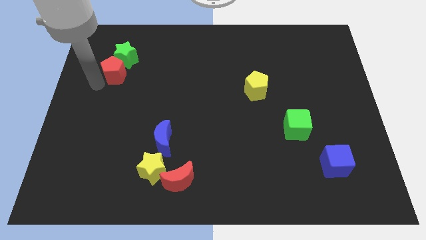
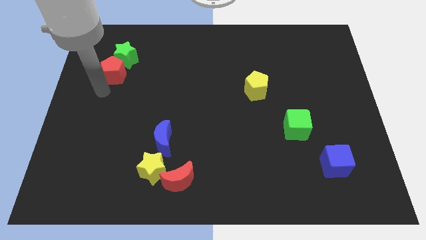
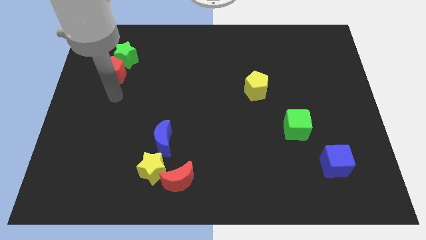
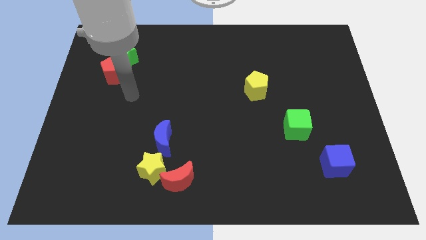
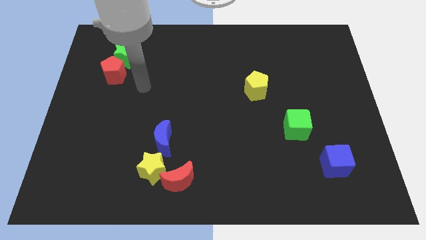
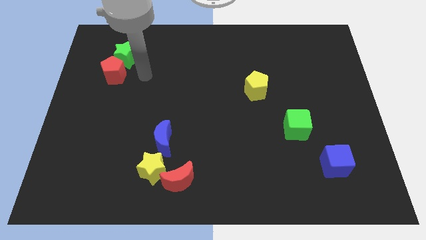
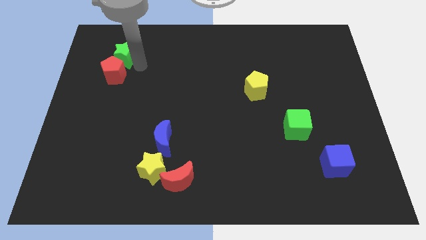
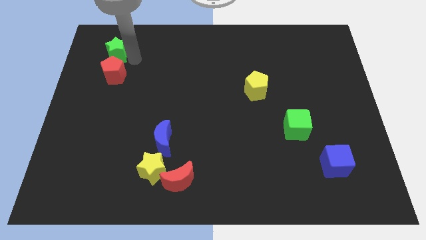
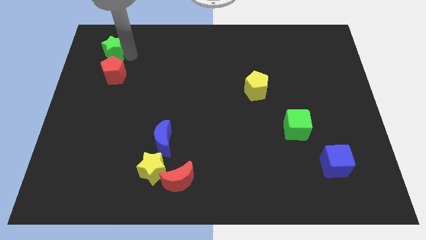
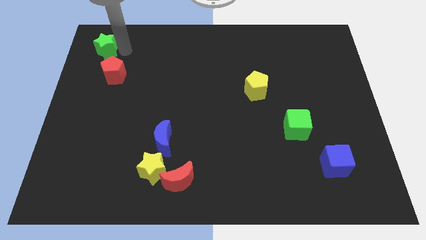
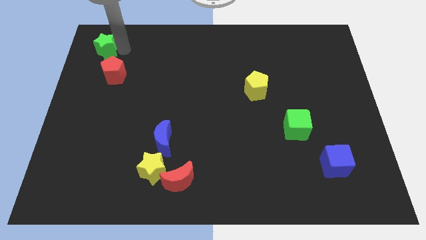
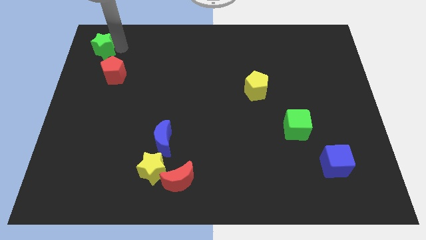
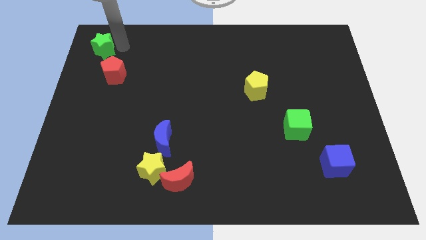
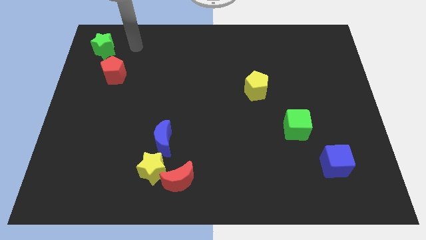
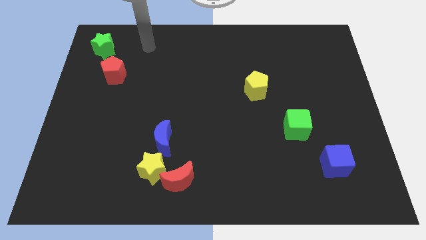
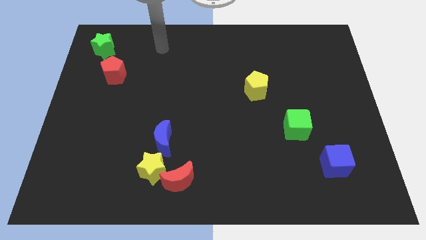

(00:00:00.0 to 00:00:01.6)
push green star to the top left corner

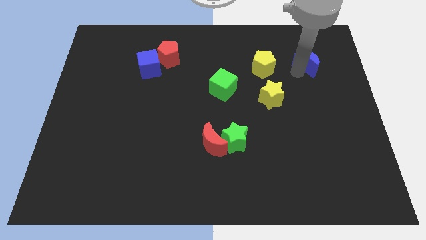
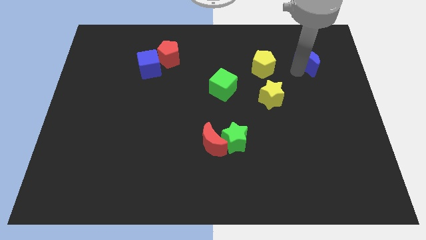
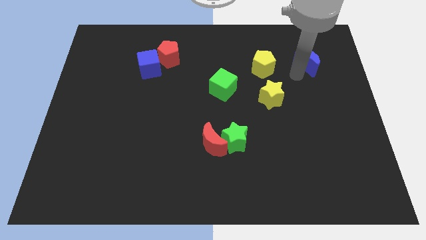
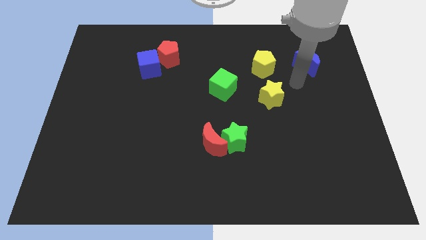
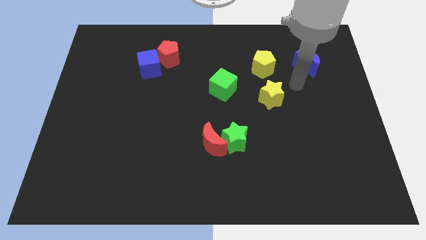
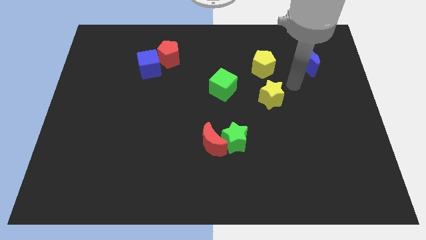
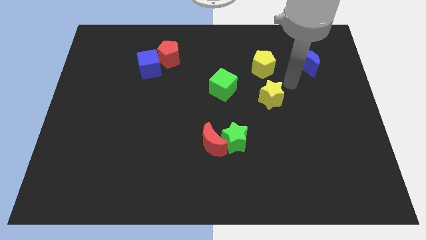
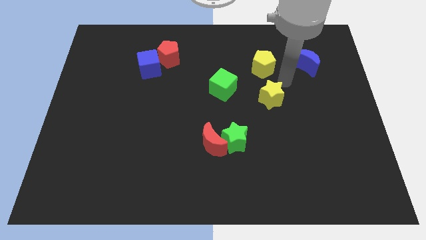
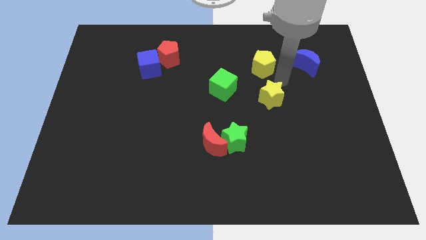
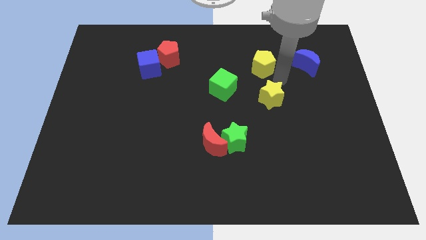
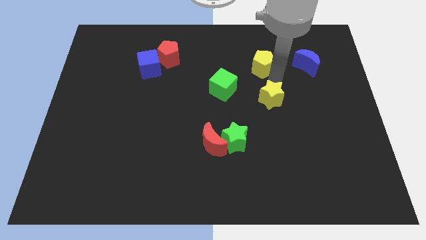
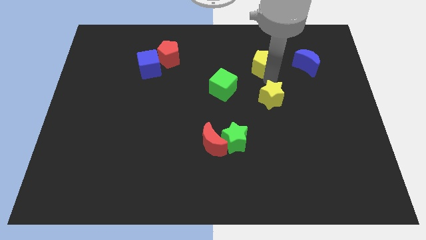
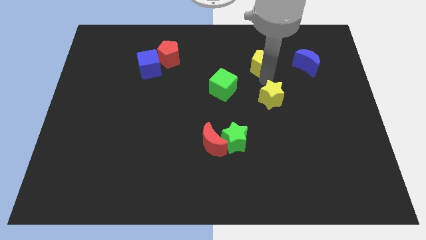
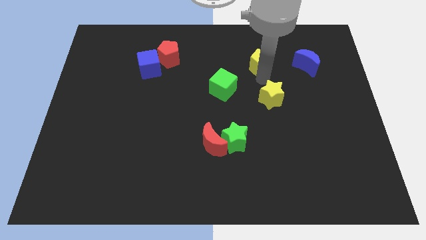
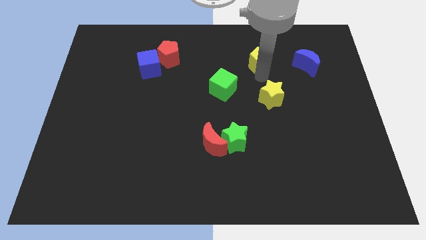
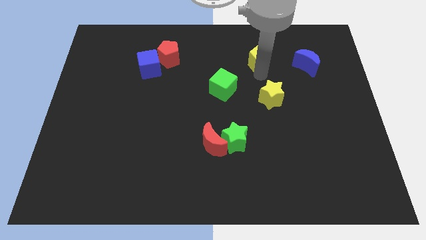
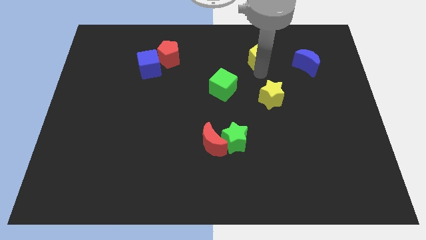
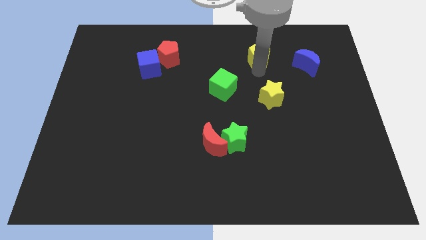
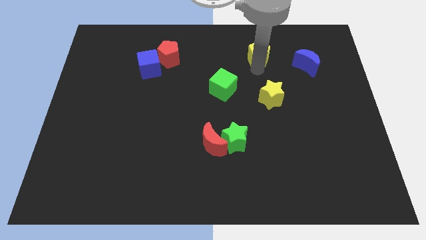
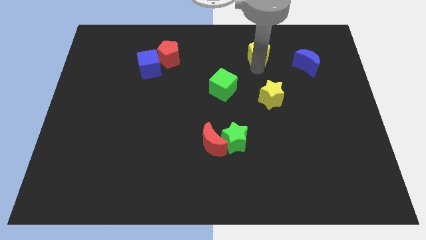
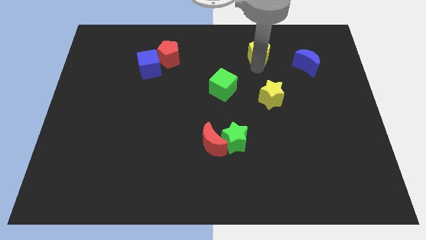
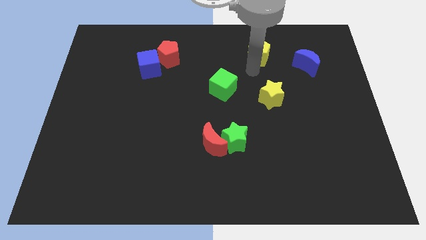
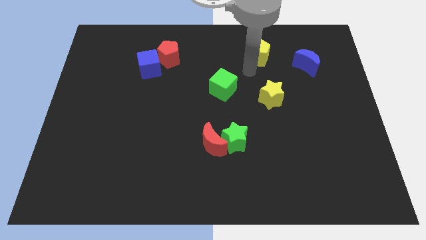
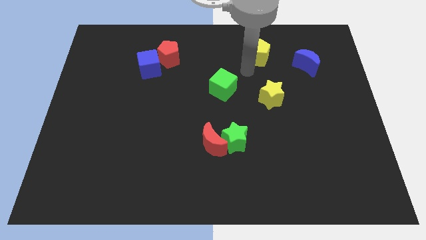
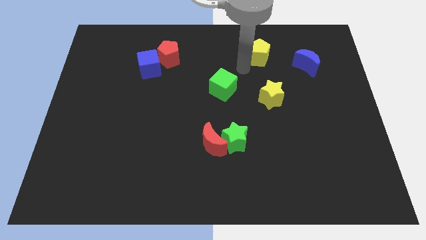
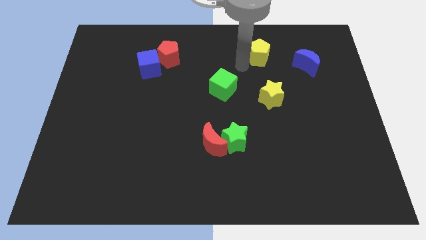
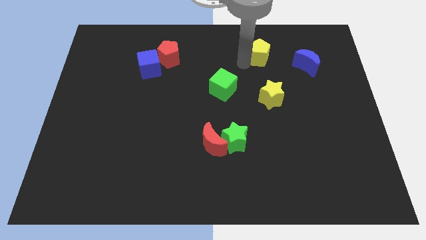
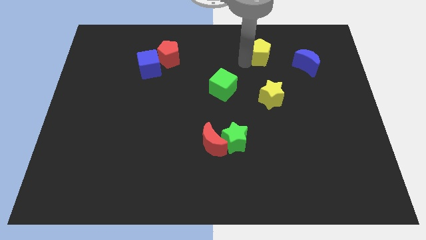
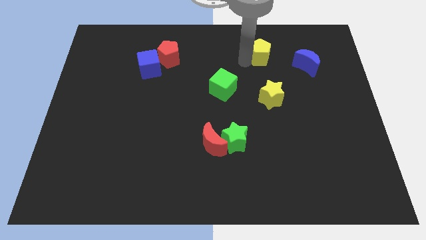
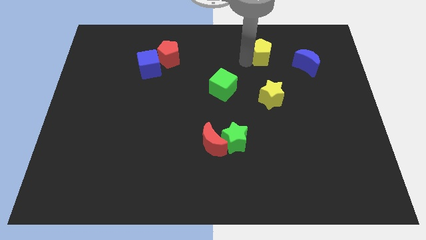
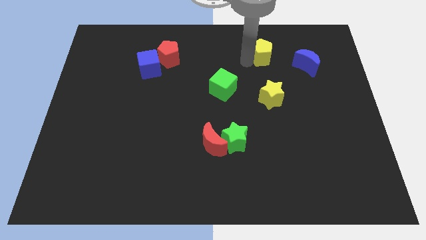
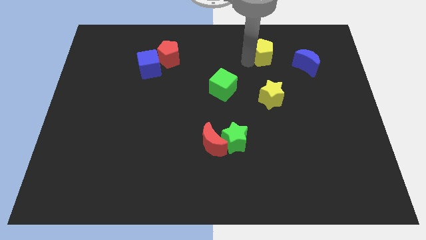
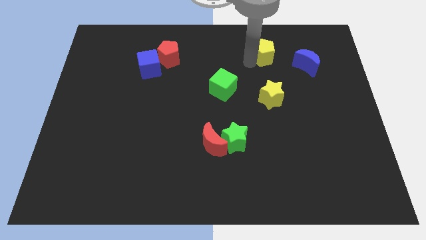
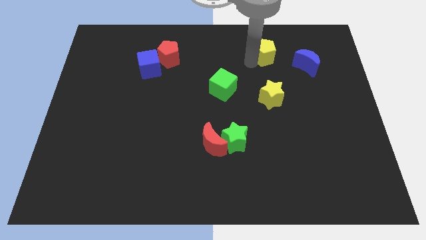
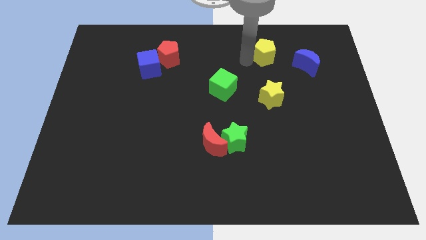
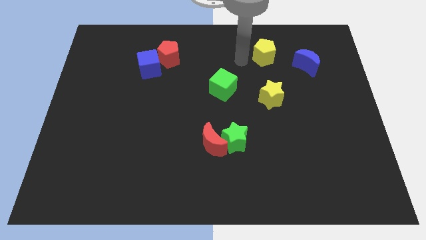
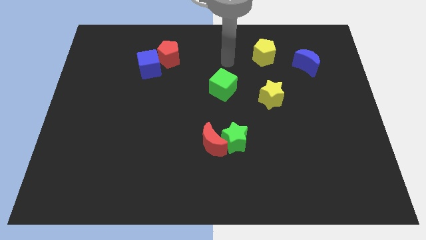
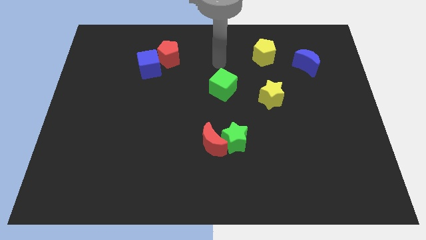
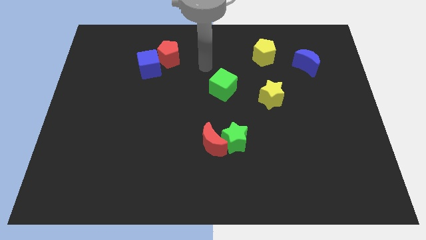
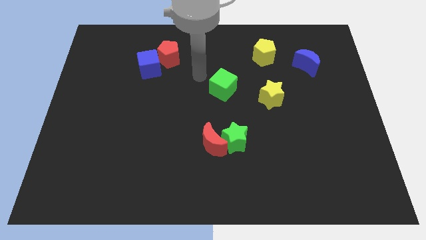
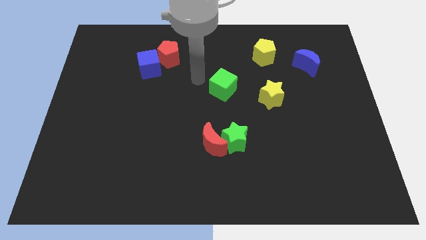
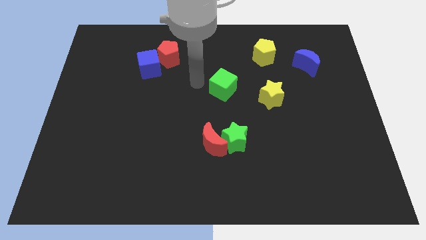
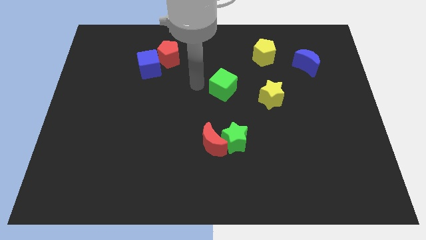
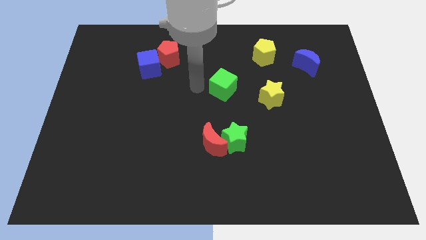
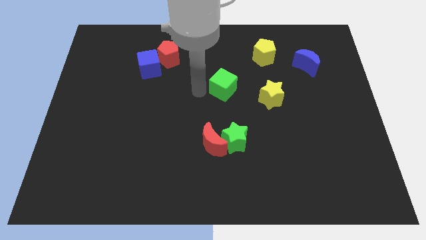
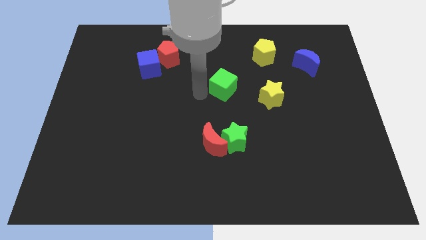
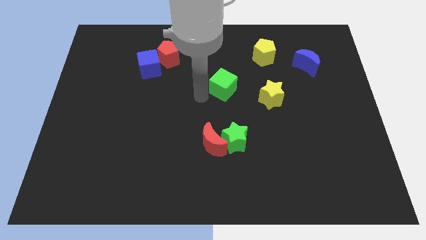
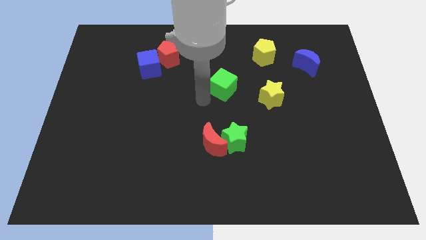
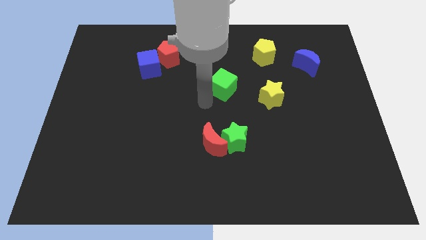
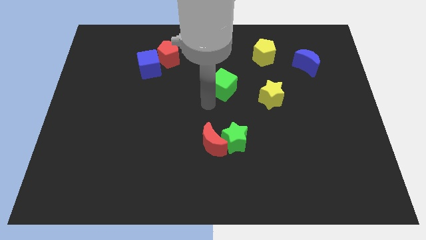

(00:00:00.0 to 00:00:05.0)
push the yellow pentagon slightly upward

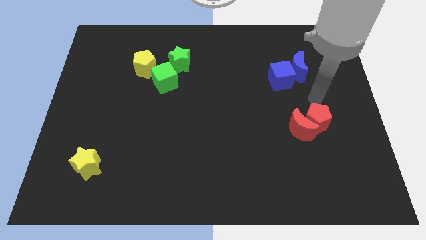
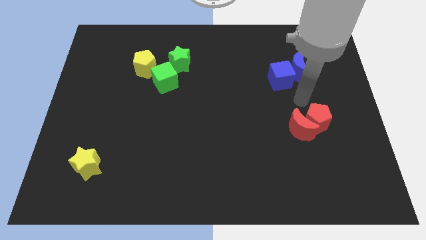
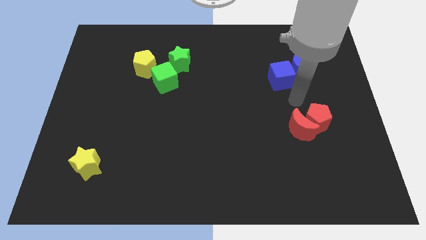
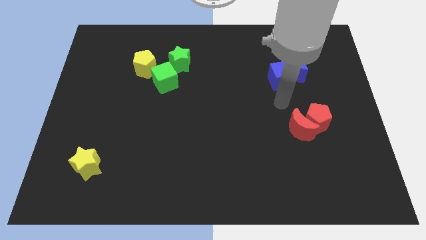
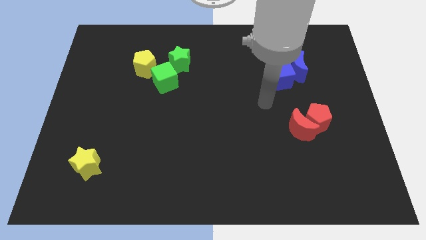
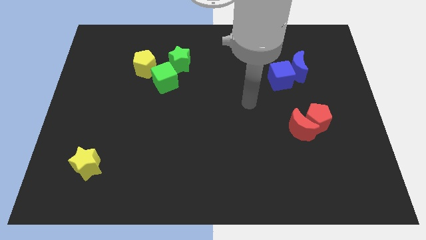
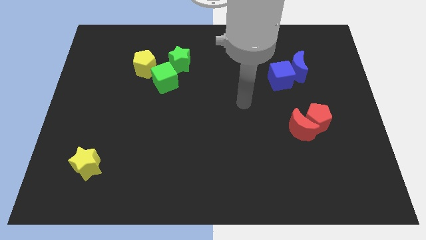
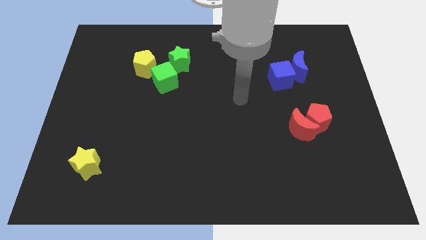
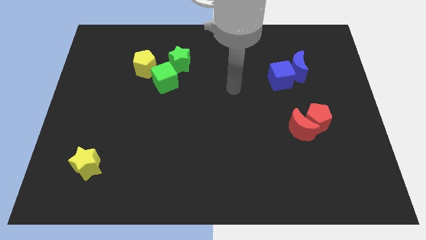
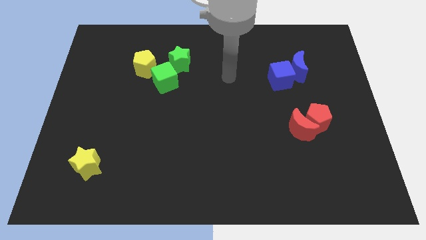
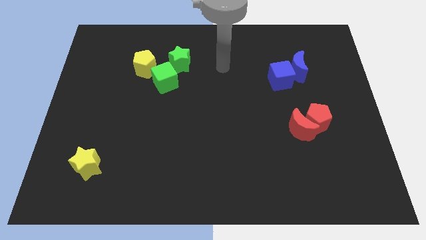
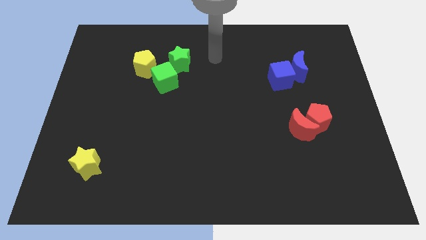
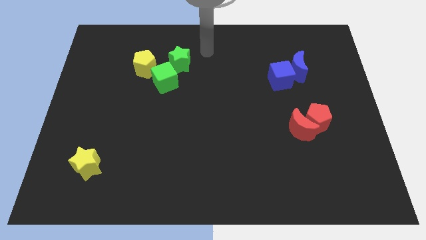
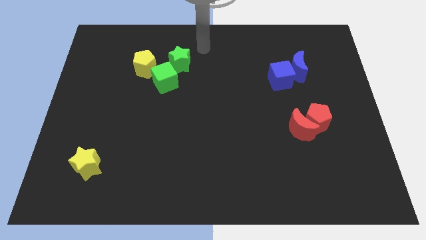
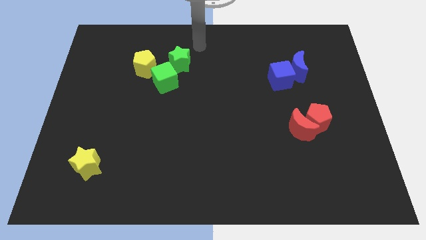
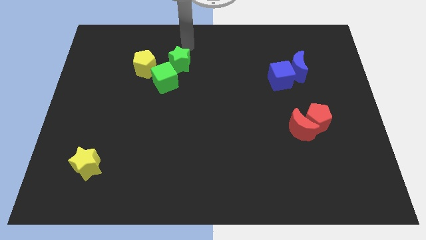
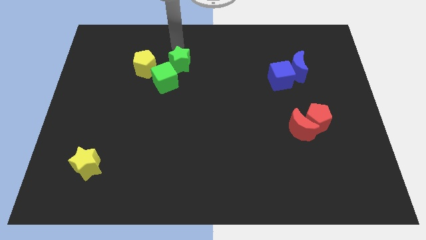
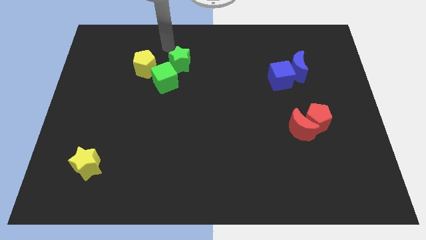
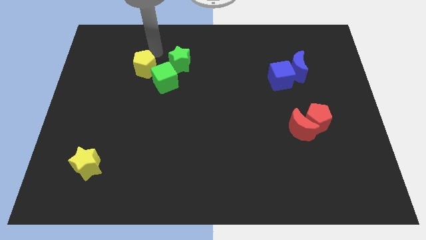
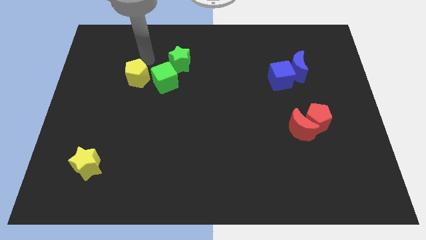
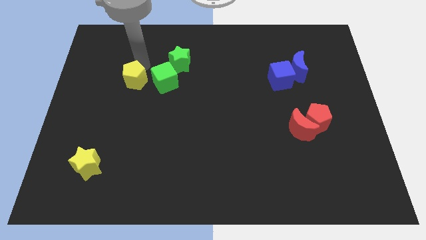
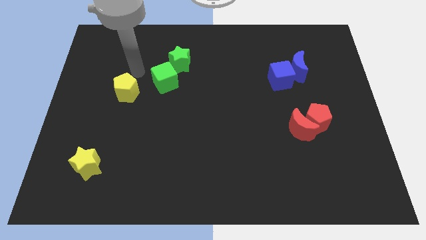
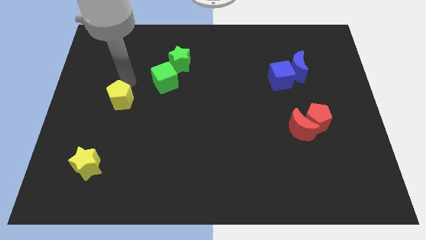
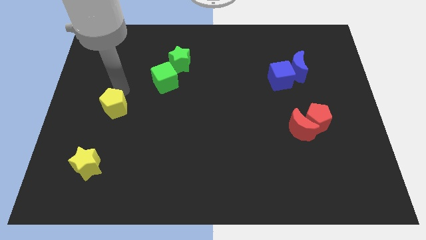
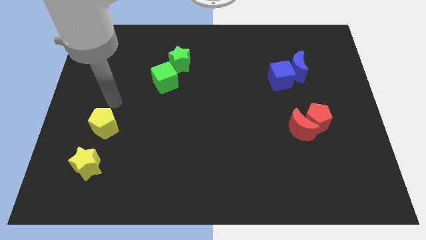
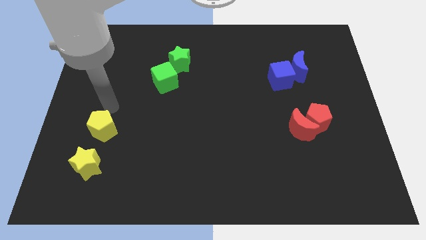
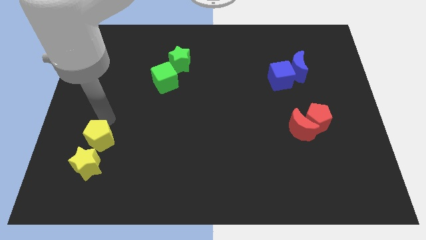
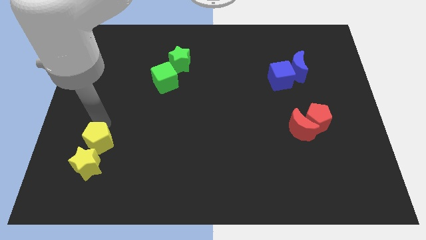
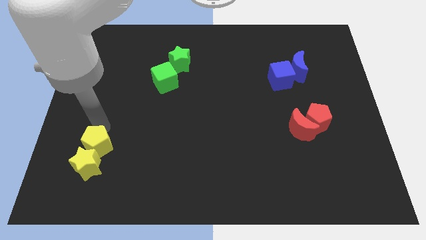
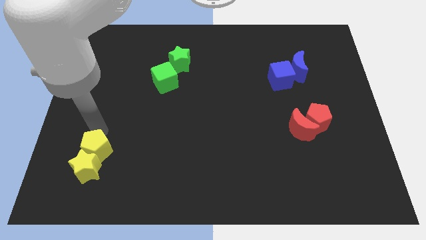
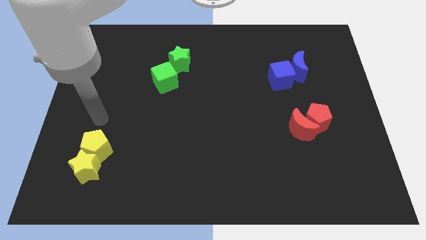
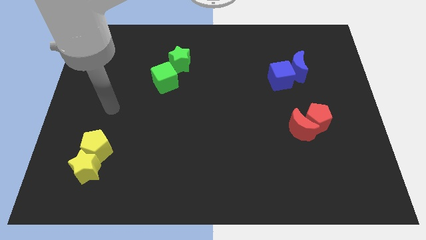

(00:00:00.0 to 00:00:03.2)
push the yellow pentagon towards the bottom left corner of the board
